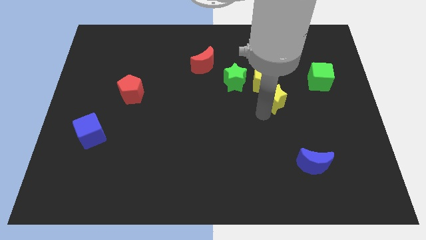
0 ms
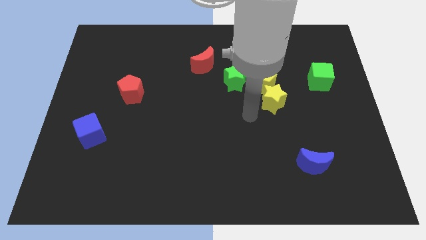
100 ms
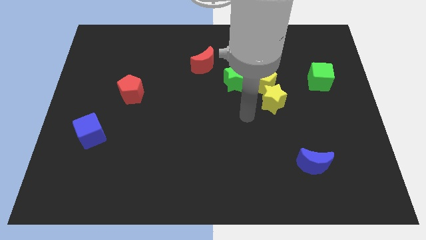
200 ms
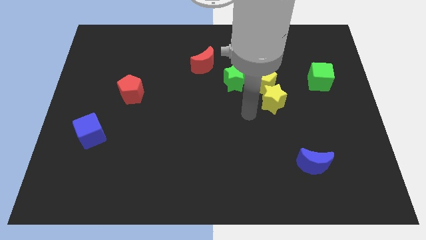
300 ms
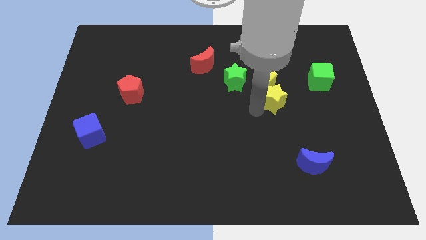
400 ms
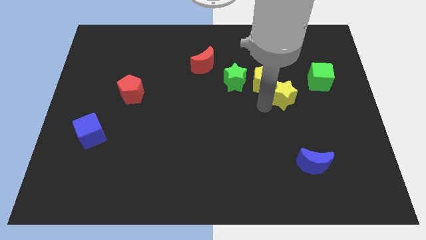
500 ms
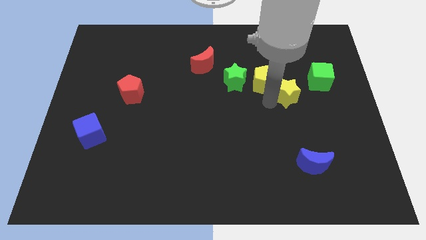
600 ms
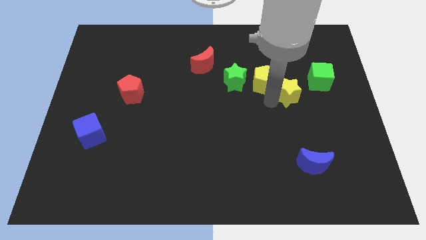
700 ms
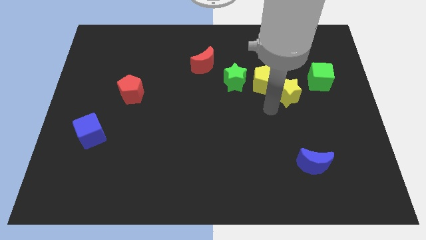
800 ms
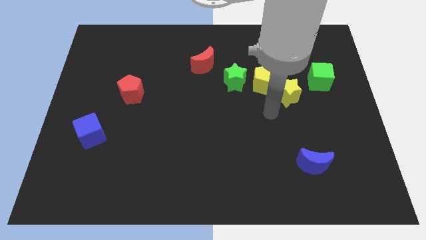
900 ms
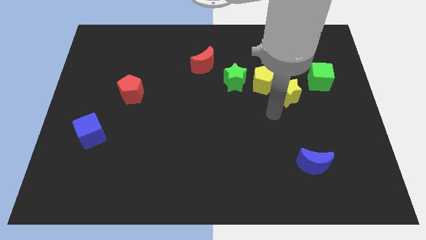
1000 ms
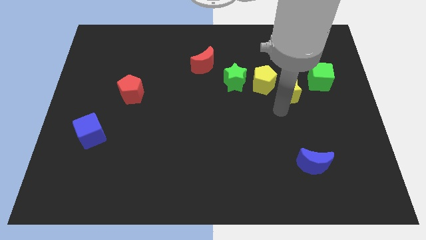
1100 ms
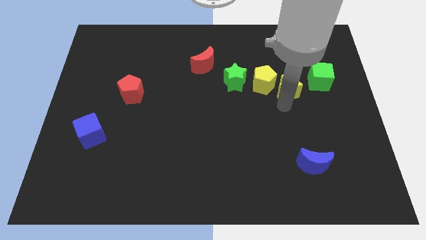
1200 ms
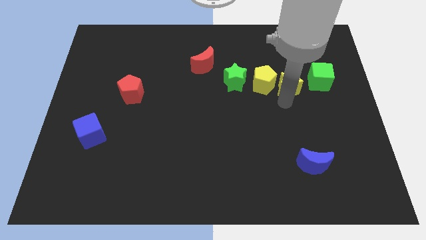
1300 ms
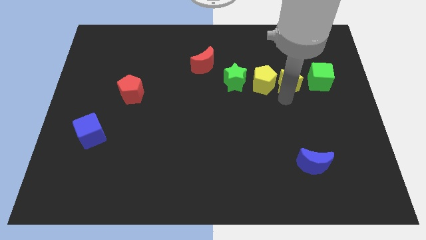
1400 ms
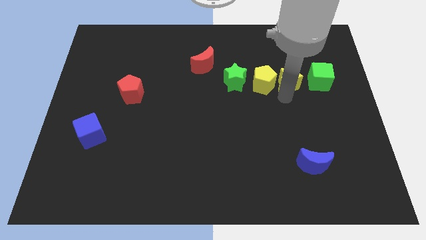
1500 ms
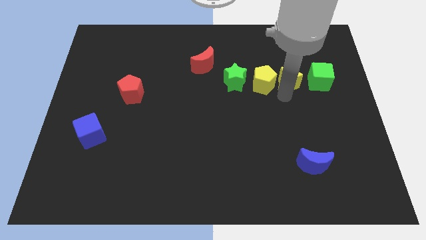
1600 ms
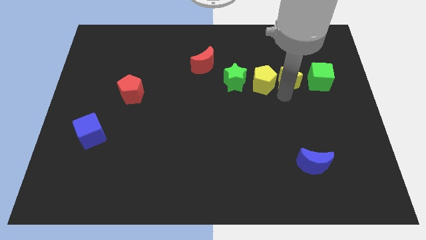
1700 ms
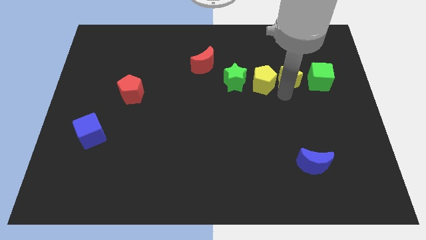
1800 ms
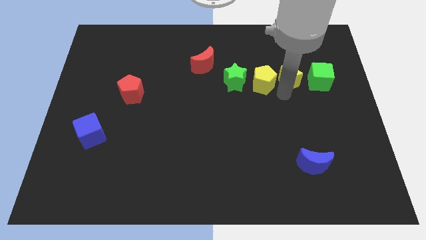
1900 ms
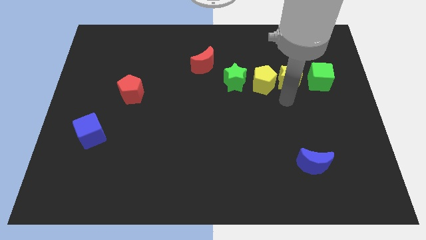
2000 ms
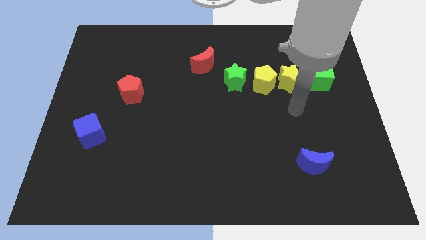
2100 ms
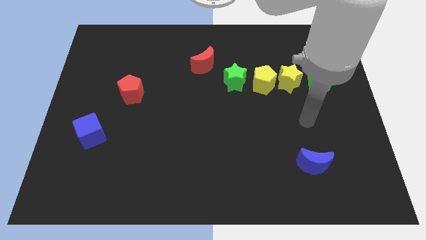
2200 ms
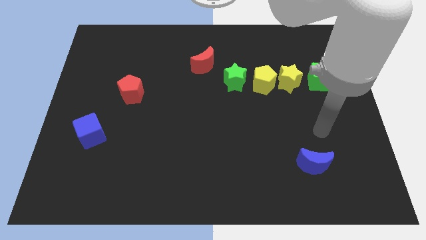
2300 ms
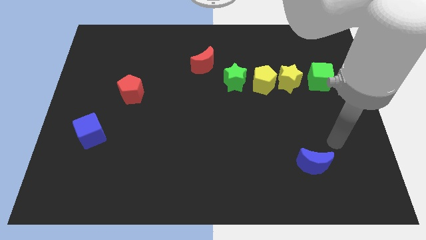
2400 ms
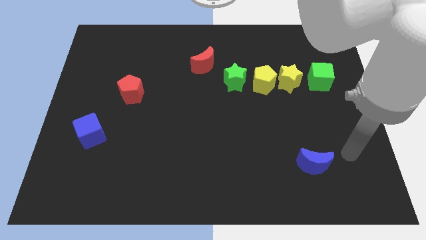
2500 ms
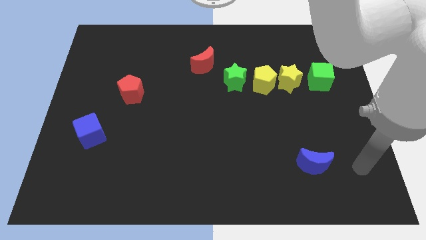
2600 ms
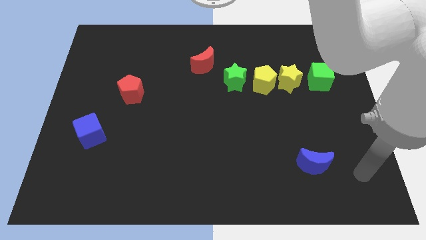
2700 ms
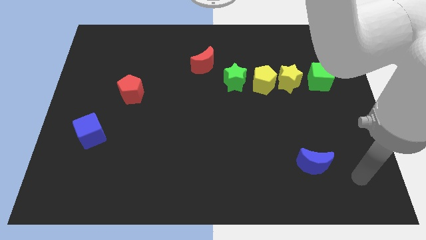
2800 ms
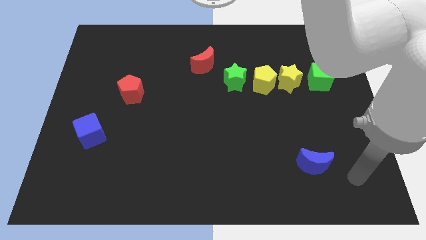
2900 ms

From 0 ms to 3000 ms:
place the yellow star at the right side of the yellow pentagon

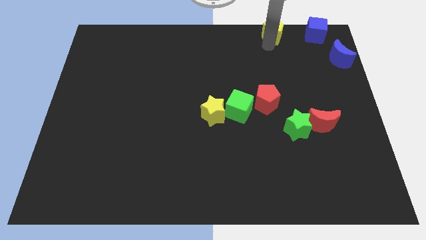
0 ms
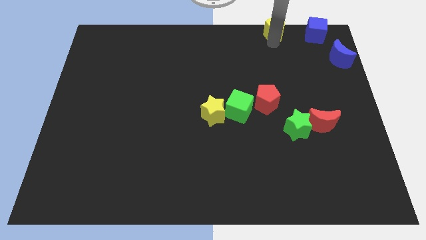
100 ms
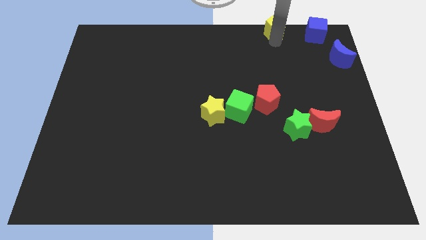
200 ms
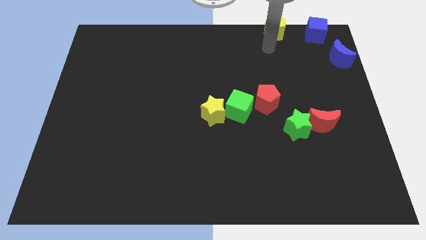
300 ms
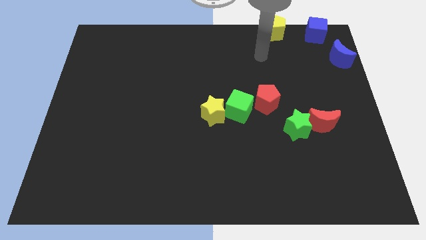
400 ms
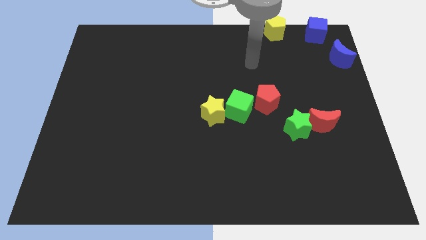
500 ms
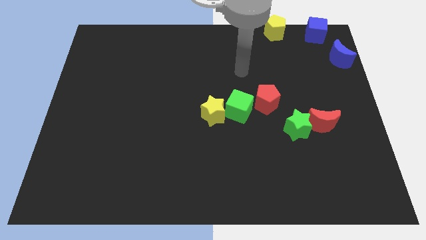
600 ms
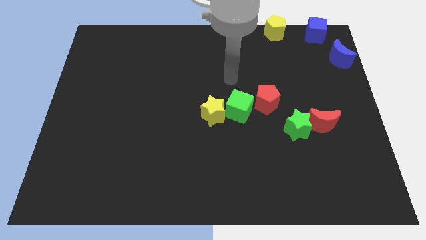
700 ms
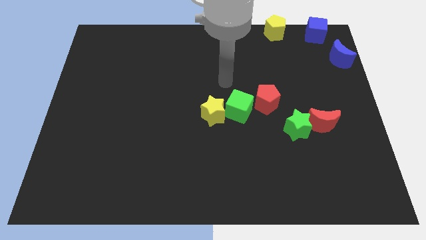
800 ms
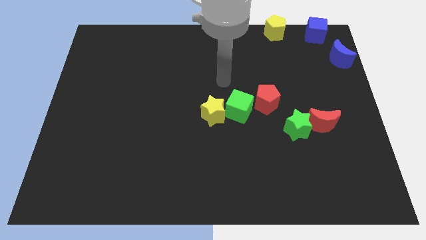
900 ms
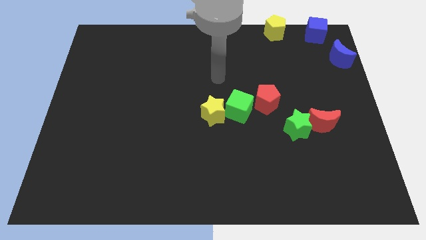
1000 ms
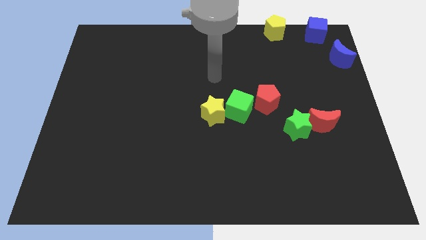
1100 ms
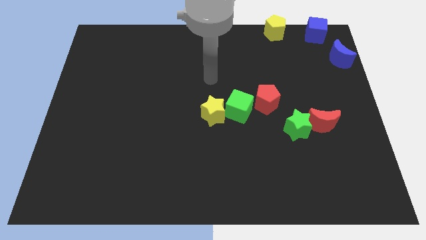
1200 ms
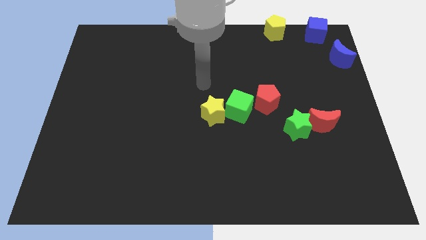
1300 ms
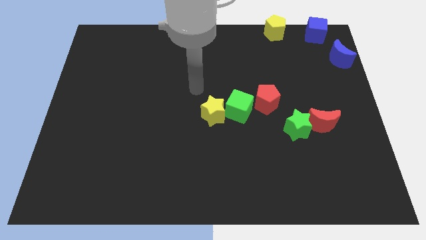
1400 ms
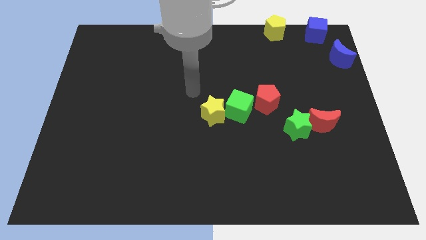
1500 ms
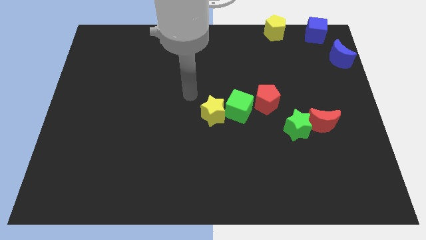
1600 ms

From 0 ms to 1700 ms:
move the yellow pentagon towards top

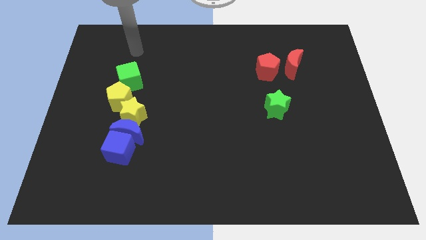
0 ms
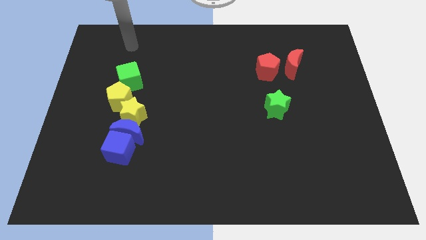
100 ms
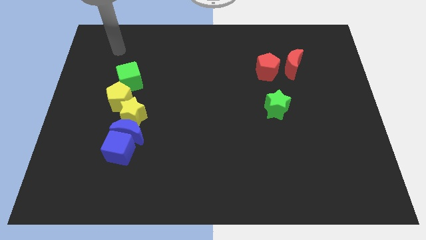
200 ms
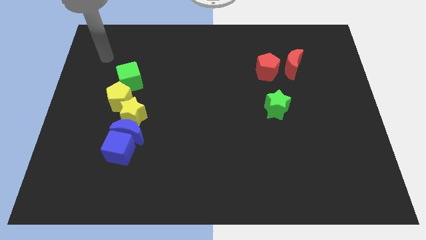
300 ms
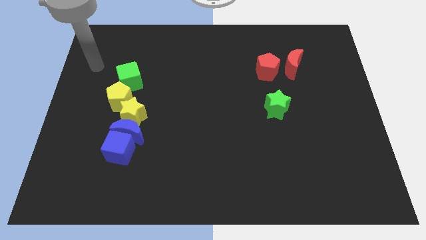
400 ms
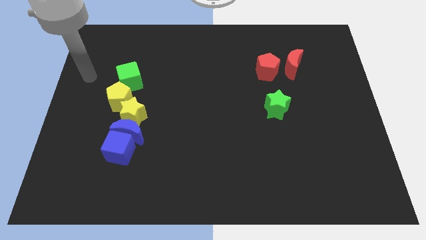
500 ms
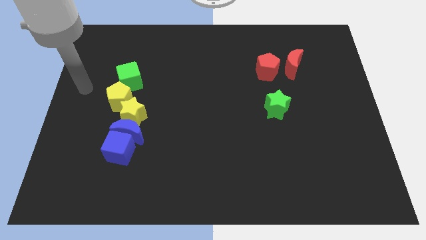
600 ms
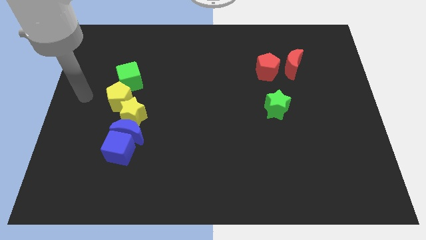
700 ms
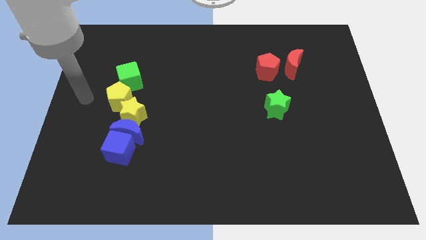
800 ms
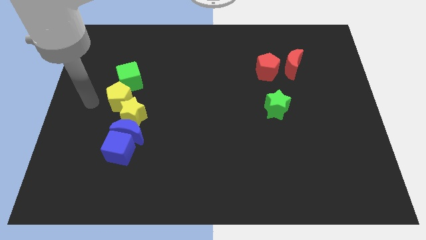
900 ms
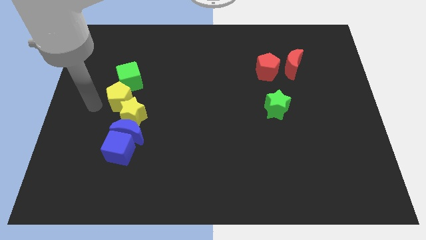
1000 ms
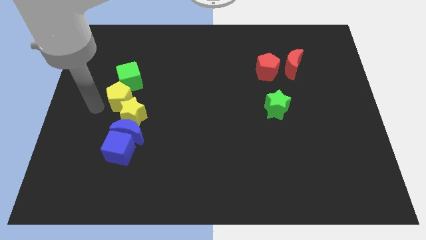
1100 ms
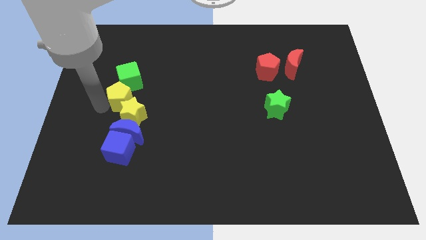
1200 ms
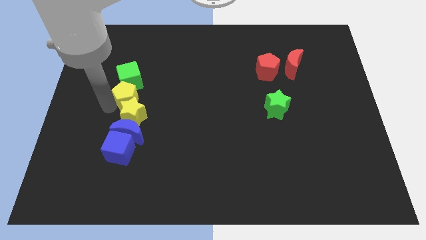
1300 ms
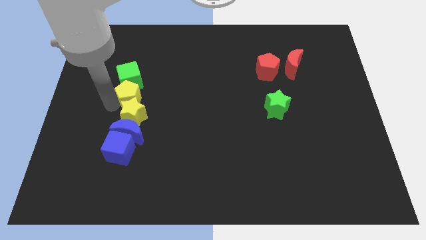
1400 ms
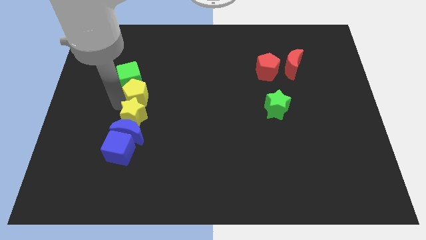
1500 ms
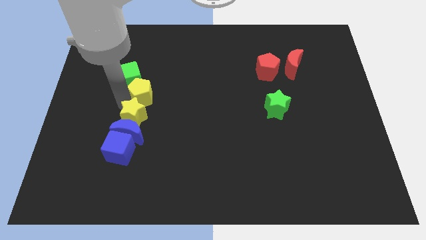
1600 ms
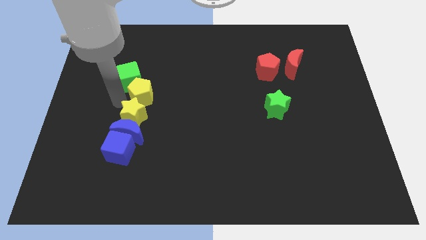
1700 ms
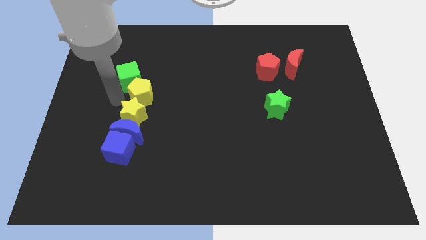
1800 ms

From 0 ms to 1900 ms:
push the yellow pentagon slightly towards the right side

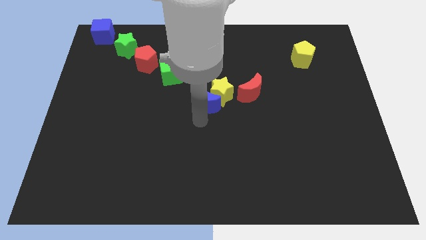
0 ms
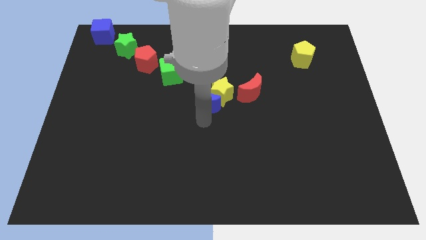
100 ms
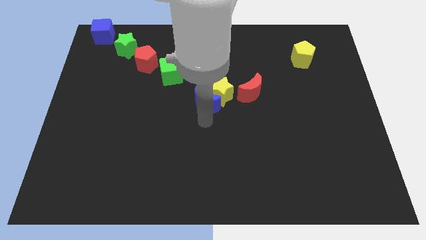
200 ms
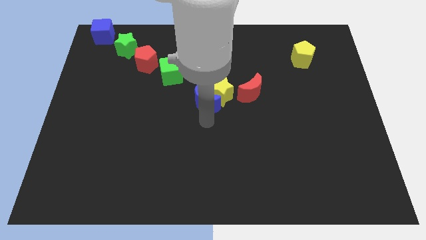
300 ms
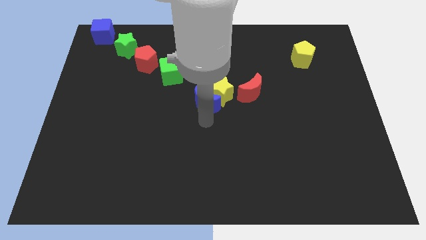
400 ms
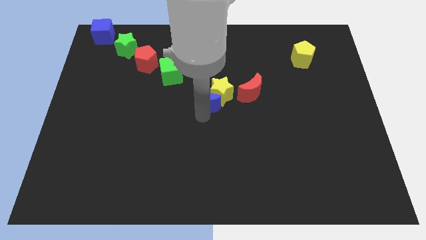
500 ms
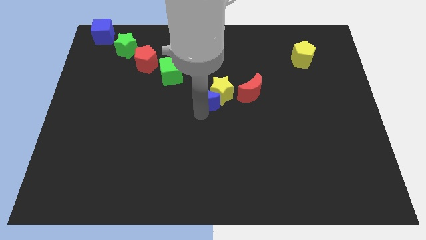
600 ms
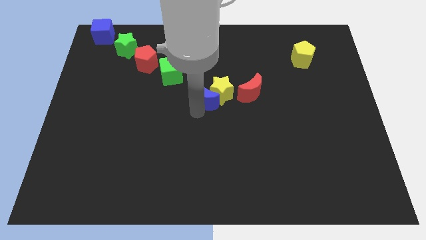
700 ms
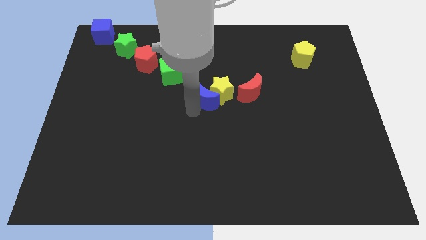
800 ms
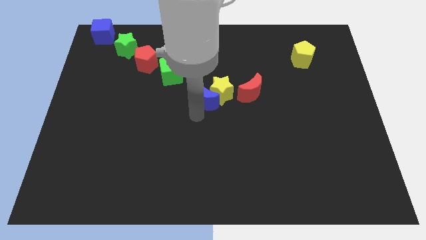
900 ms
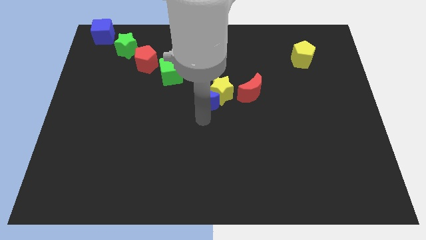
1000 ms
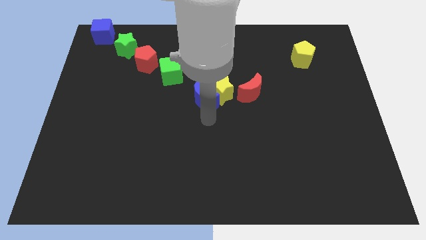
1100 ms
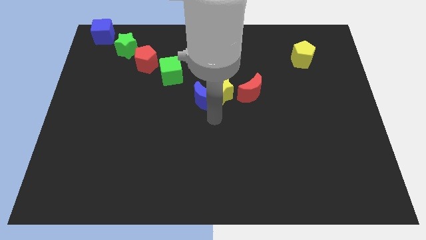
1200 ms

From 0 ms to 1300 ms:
move yellow star and blue moon to the center

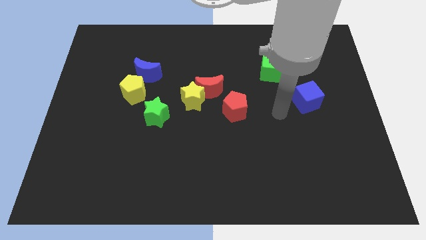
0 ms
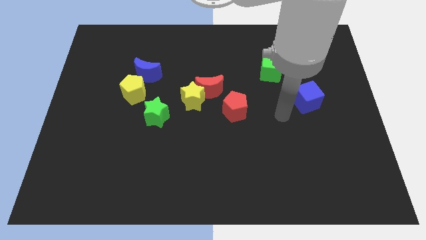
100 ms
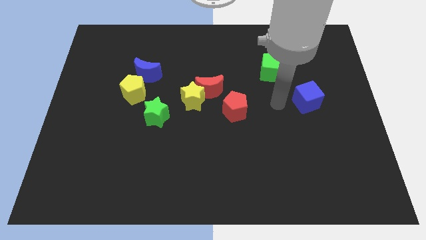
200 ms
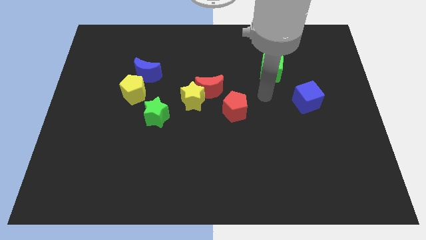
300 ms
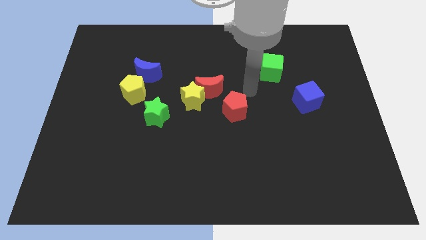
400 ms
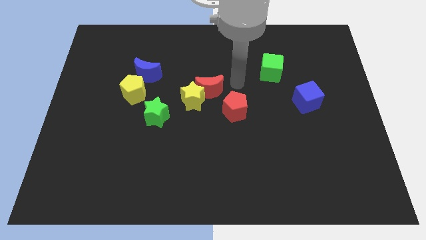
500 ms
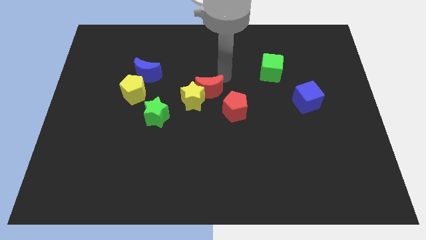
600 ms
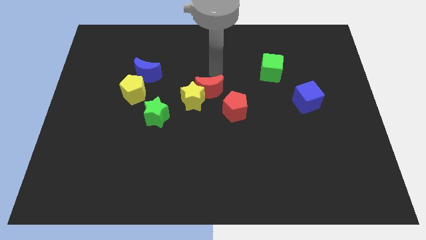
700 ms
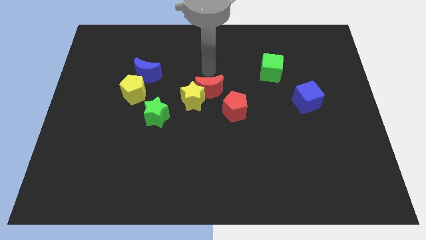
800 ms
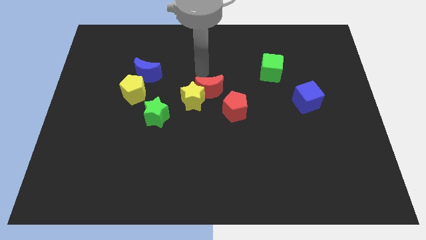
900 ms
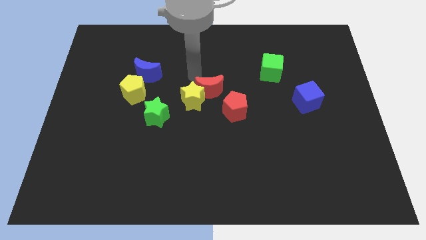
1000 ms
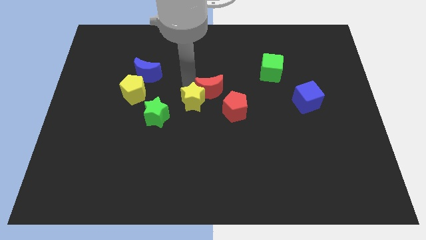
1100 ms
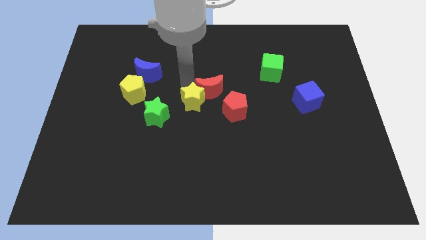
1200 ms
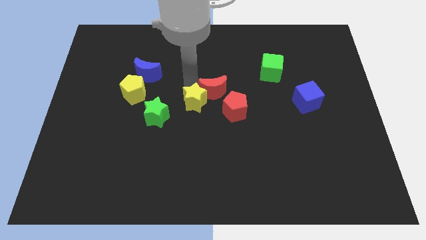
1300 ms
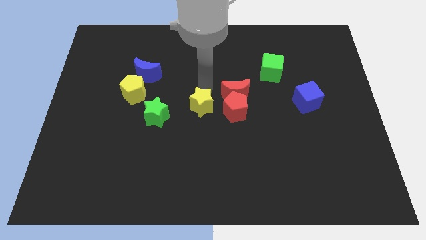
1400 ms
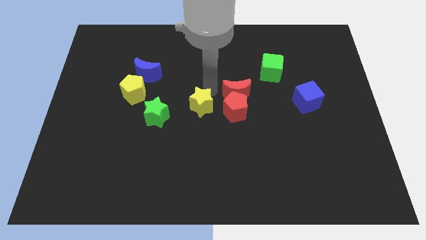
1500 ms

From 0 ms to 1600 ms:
push the red moon into the top side of the red pentagon
